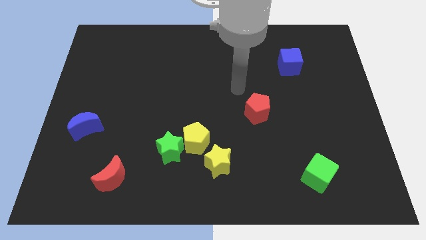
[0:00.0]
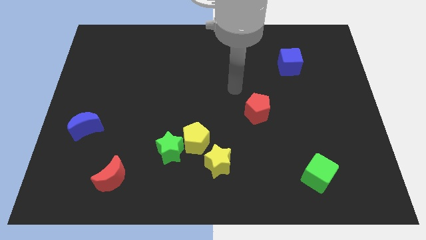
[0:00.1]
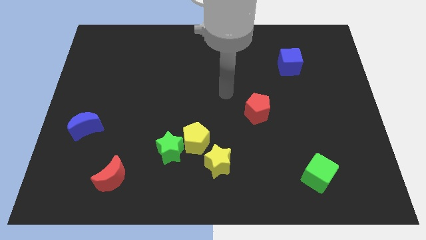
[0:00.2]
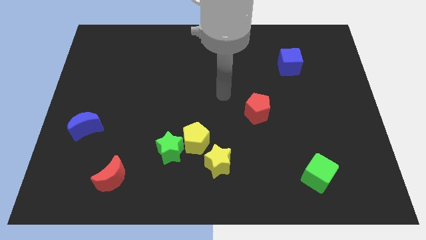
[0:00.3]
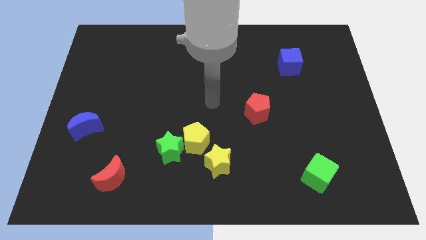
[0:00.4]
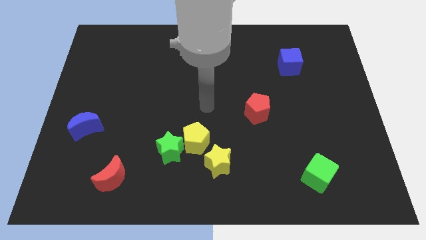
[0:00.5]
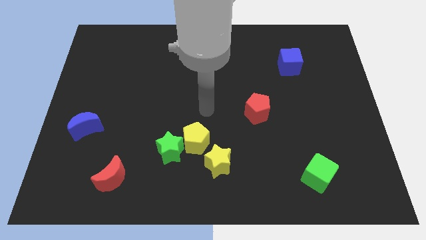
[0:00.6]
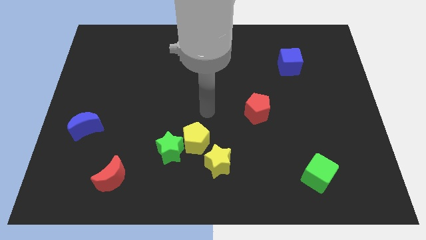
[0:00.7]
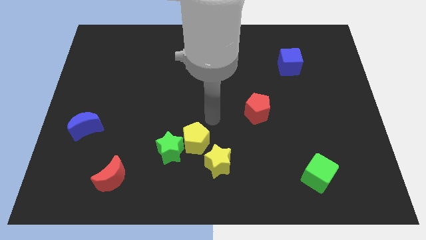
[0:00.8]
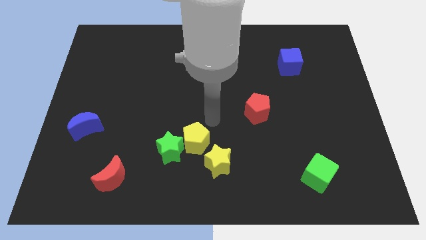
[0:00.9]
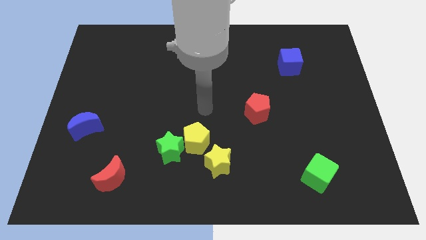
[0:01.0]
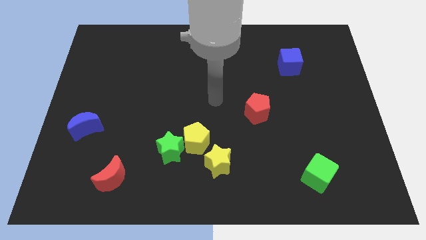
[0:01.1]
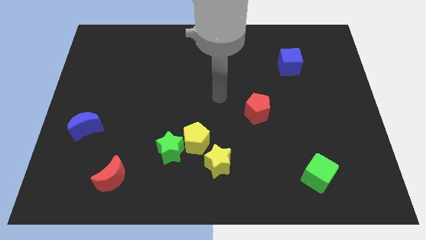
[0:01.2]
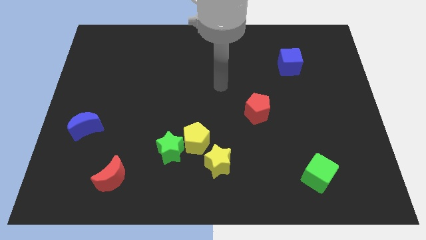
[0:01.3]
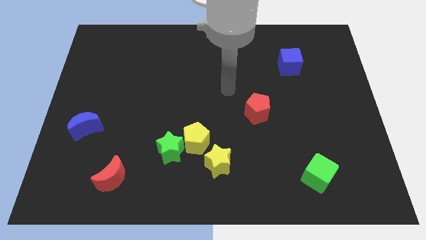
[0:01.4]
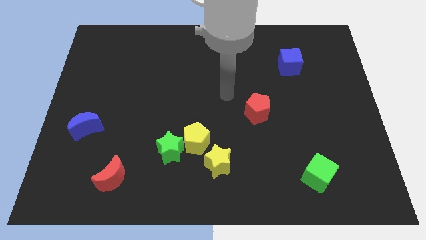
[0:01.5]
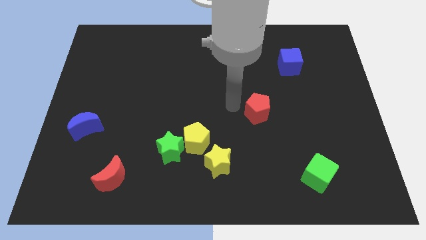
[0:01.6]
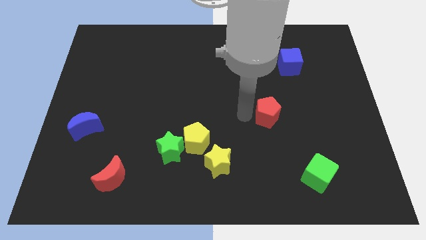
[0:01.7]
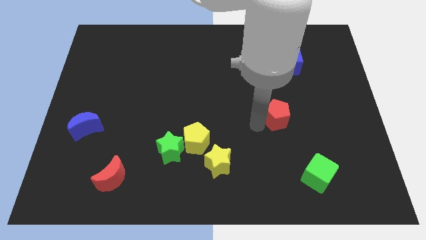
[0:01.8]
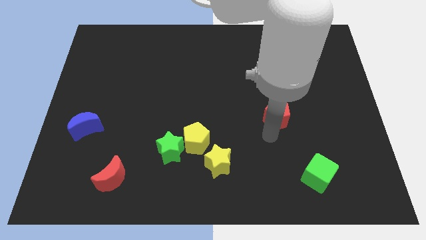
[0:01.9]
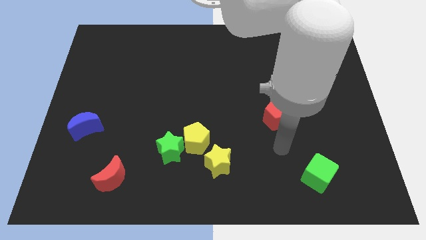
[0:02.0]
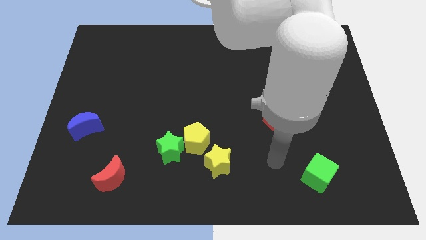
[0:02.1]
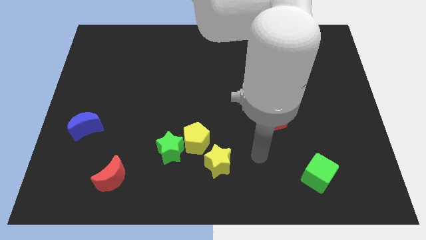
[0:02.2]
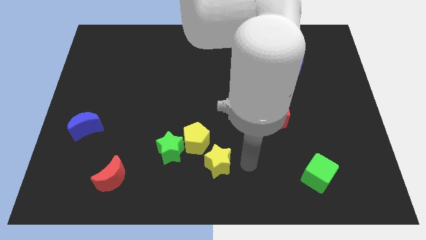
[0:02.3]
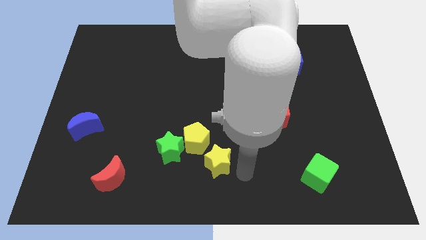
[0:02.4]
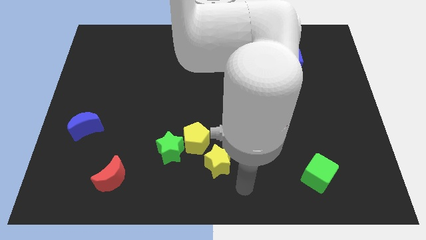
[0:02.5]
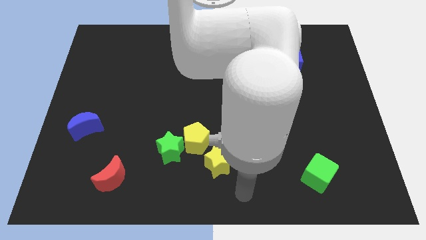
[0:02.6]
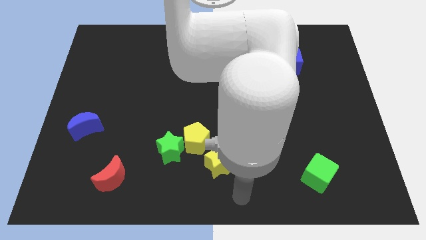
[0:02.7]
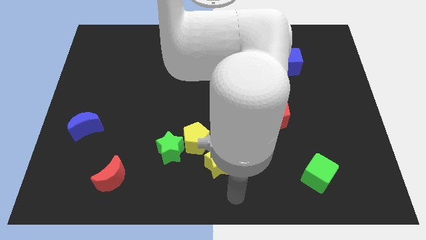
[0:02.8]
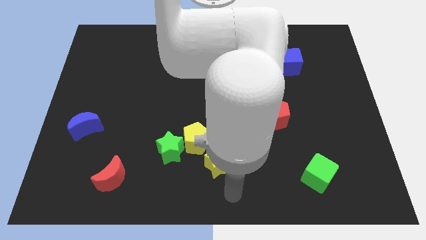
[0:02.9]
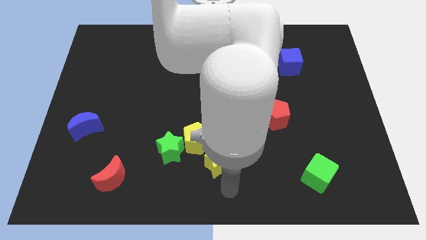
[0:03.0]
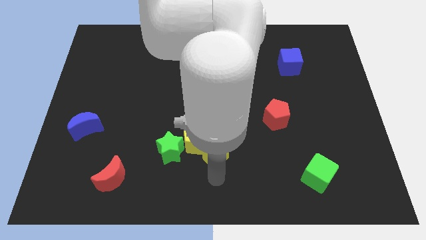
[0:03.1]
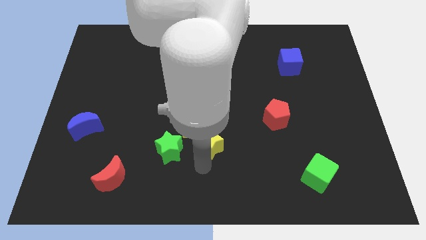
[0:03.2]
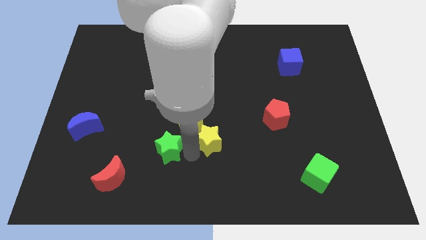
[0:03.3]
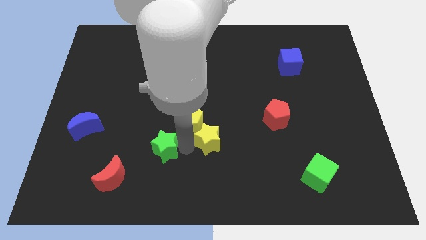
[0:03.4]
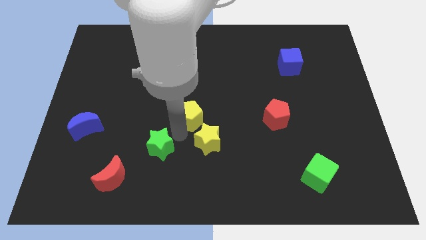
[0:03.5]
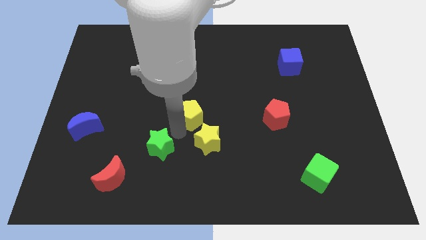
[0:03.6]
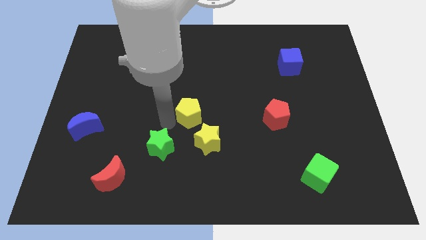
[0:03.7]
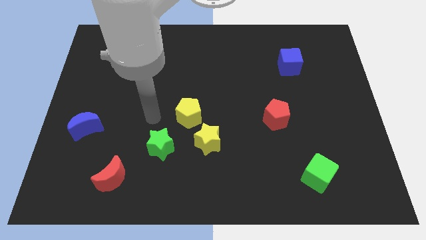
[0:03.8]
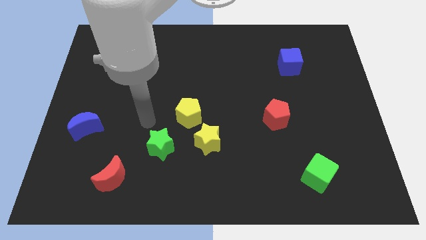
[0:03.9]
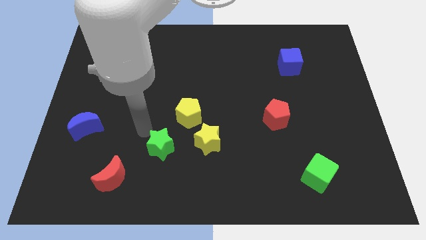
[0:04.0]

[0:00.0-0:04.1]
move the yellow pentagon towards the center of the board

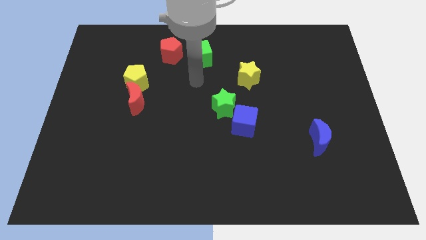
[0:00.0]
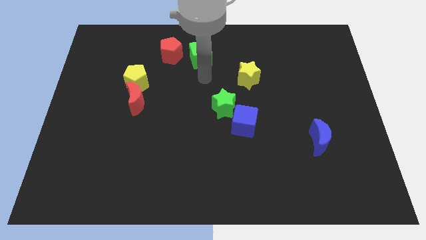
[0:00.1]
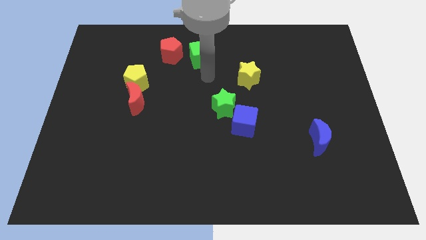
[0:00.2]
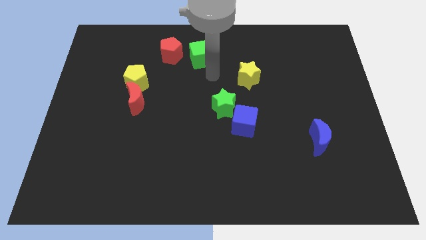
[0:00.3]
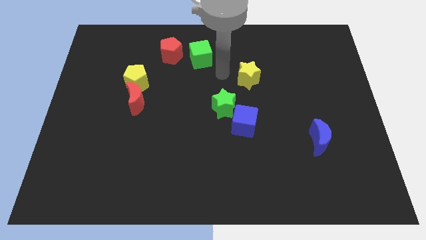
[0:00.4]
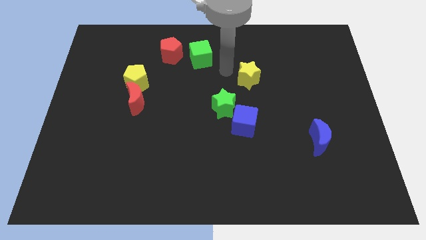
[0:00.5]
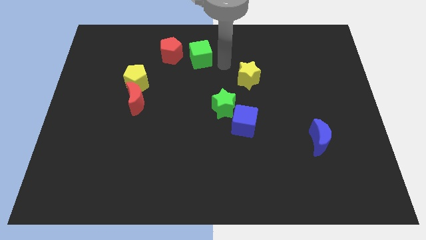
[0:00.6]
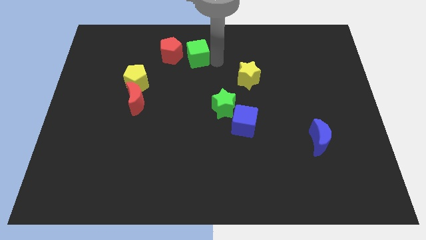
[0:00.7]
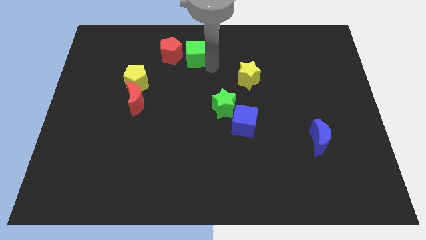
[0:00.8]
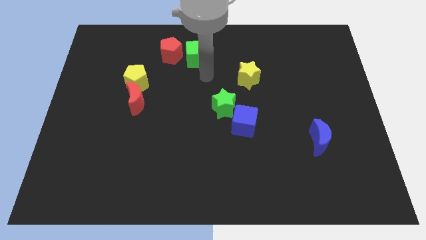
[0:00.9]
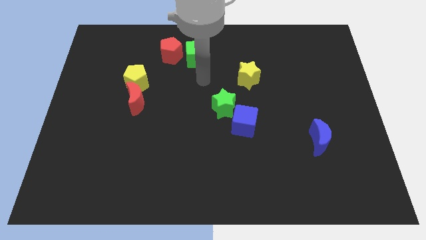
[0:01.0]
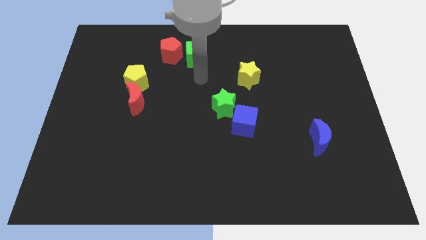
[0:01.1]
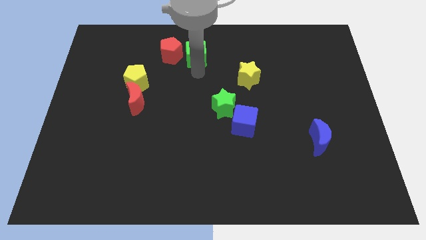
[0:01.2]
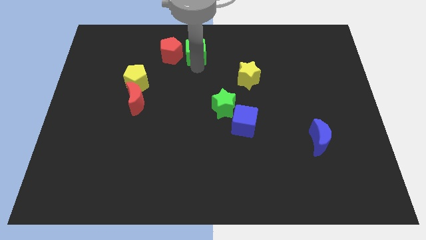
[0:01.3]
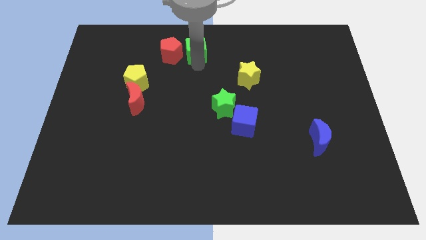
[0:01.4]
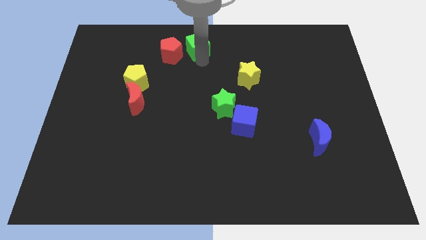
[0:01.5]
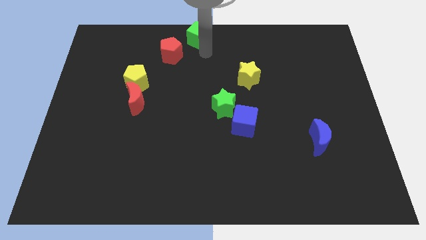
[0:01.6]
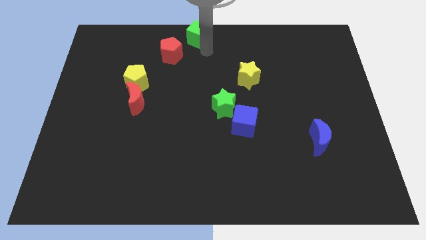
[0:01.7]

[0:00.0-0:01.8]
push the green cube to the top side

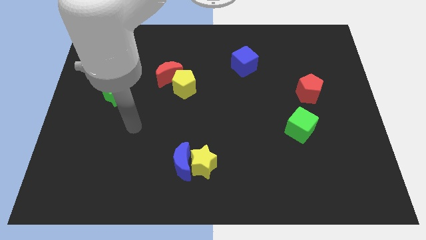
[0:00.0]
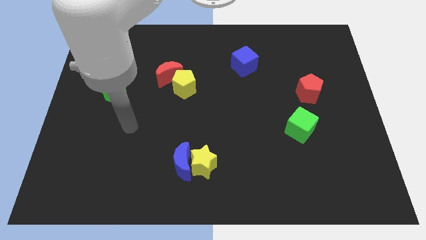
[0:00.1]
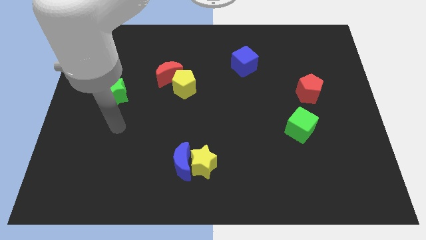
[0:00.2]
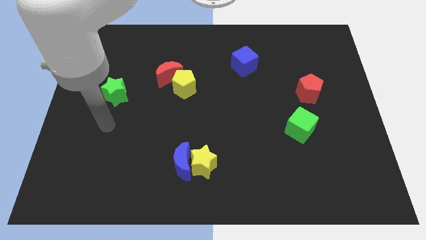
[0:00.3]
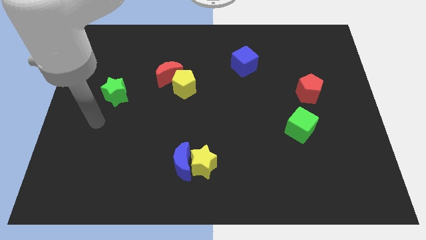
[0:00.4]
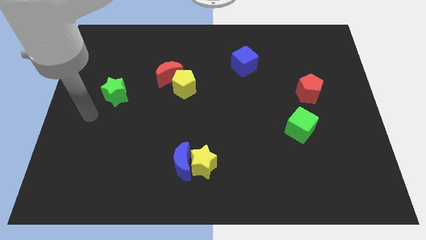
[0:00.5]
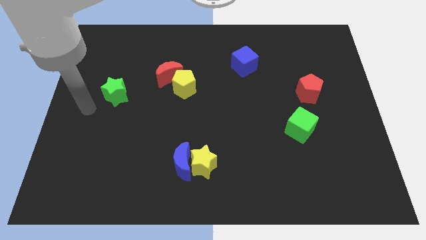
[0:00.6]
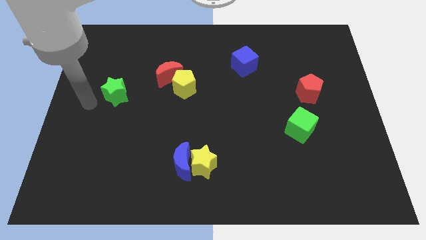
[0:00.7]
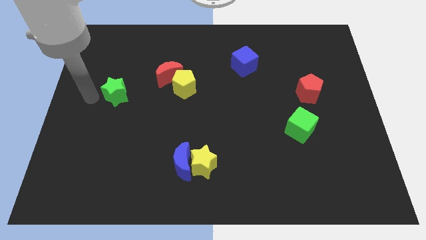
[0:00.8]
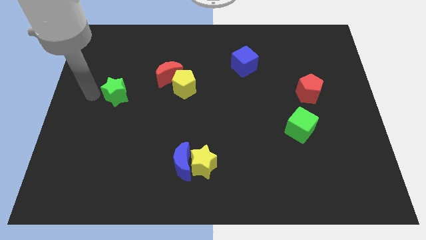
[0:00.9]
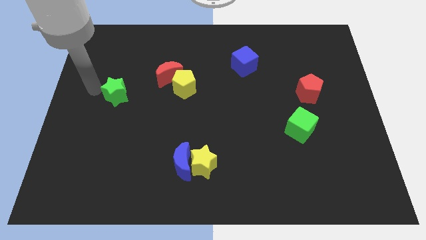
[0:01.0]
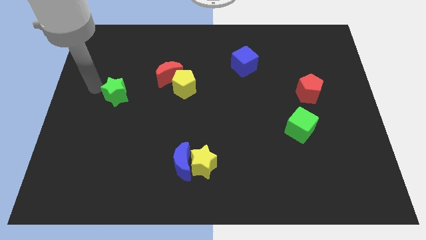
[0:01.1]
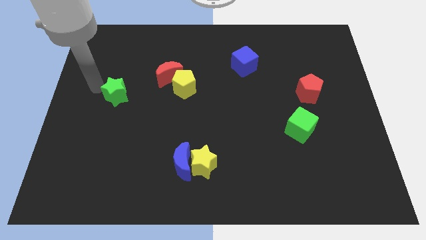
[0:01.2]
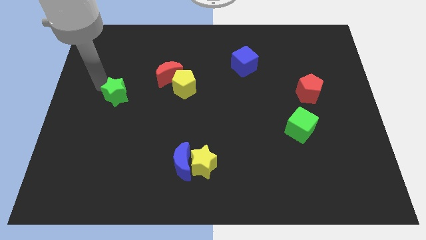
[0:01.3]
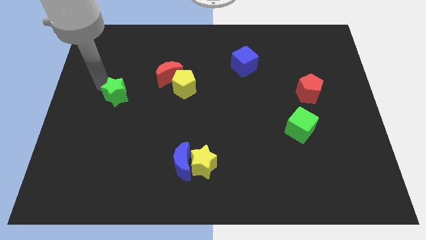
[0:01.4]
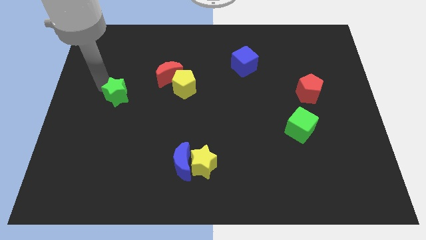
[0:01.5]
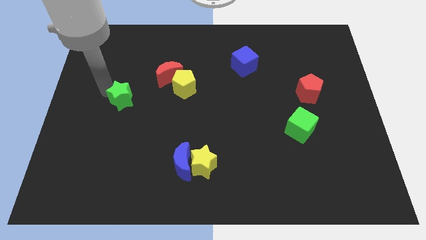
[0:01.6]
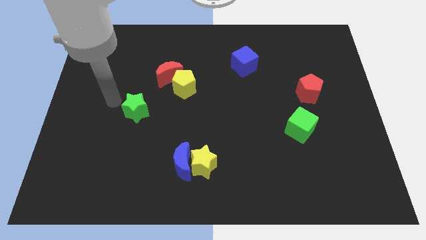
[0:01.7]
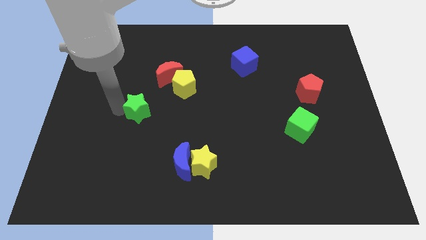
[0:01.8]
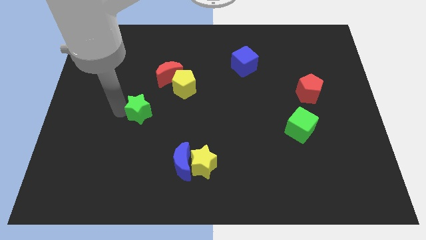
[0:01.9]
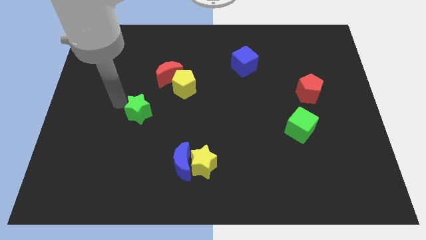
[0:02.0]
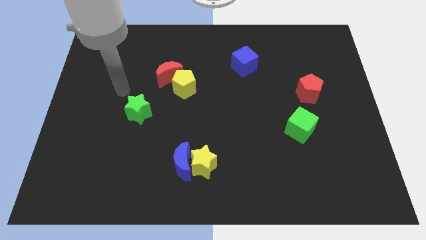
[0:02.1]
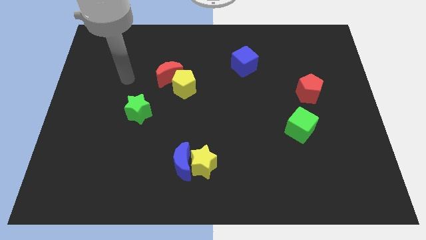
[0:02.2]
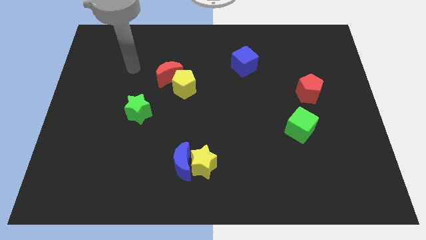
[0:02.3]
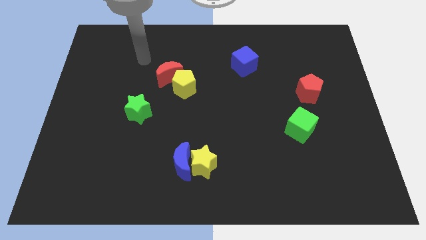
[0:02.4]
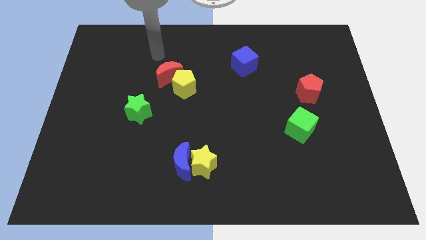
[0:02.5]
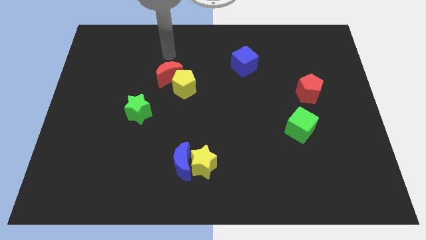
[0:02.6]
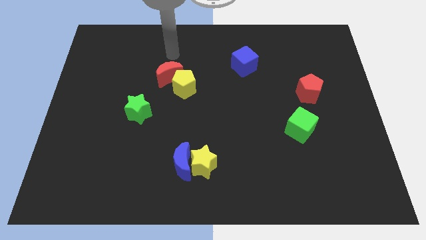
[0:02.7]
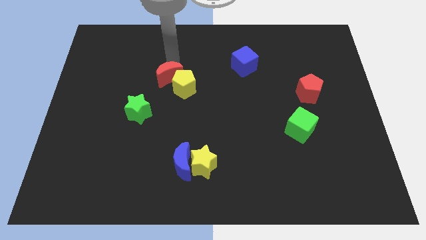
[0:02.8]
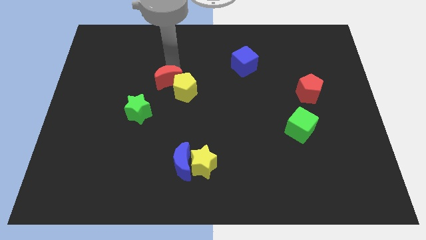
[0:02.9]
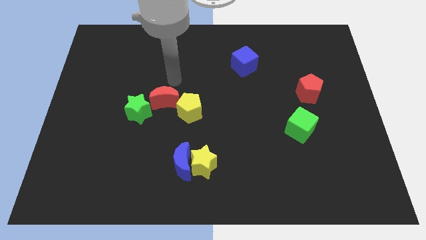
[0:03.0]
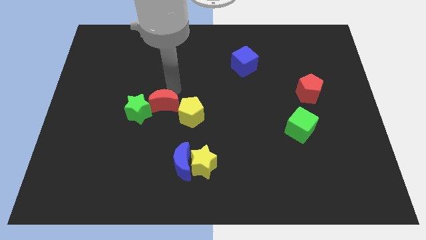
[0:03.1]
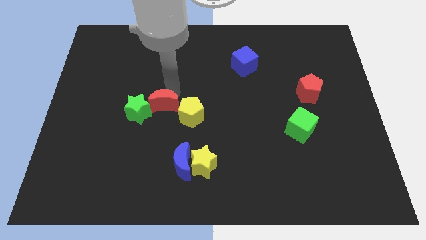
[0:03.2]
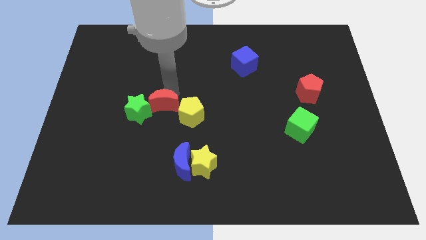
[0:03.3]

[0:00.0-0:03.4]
move red crescent near green star
